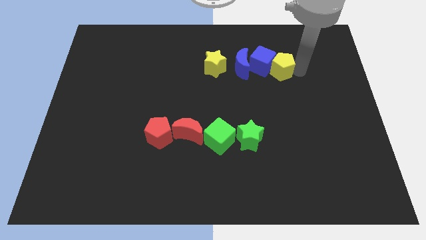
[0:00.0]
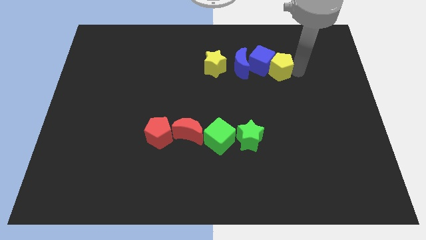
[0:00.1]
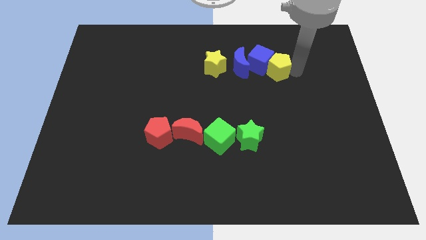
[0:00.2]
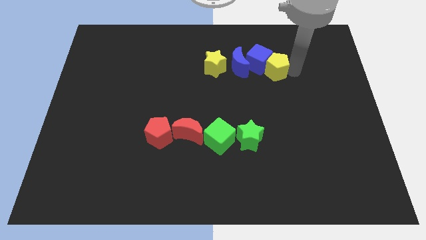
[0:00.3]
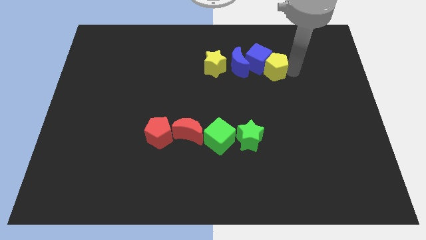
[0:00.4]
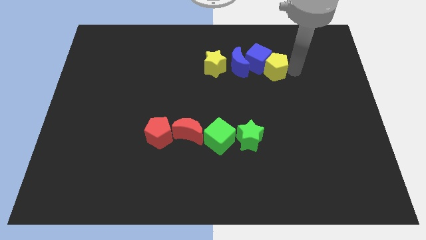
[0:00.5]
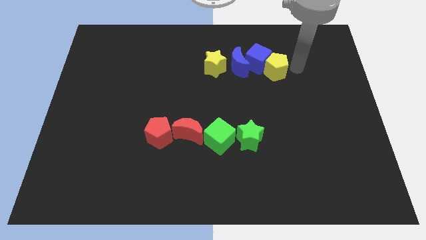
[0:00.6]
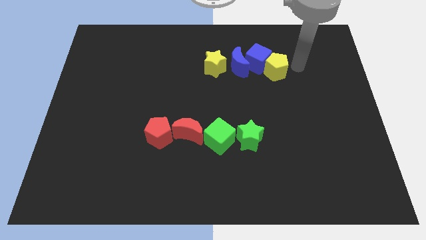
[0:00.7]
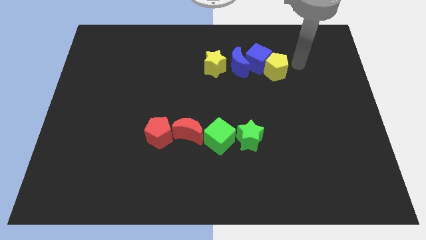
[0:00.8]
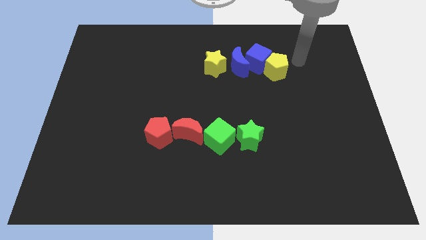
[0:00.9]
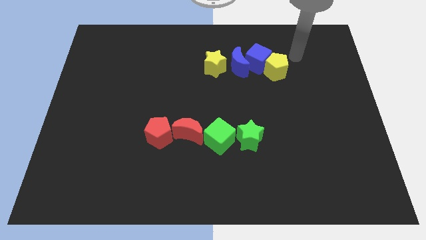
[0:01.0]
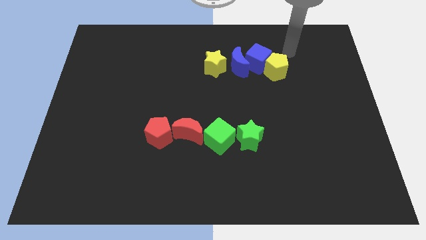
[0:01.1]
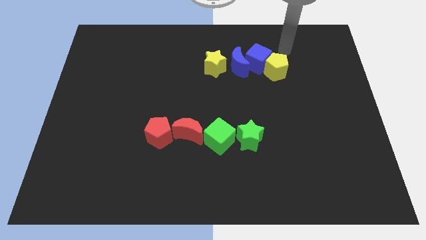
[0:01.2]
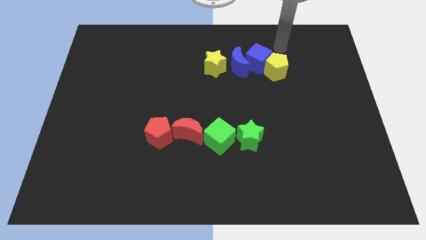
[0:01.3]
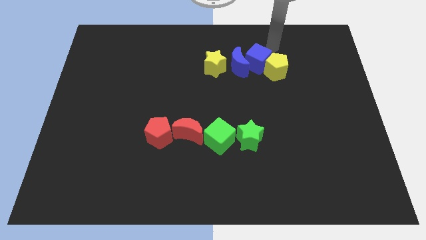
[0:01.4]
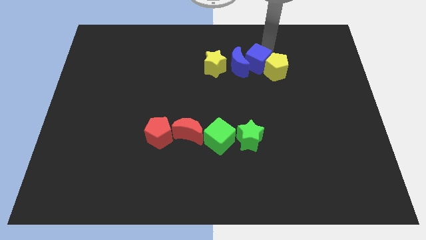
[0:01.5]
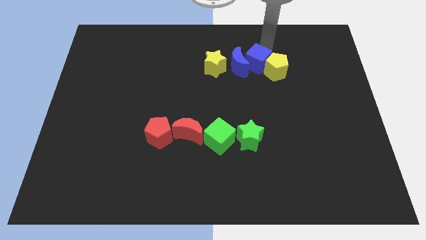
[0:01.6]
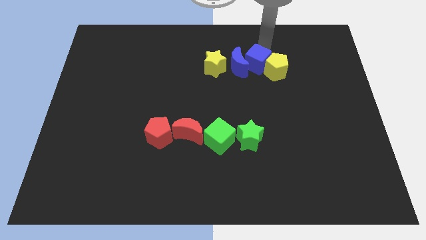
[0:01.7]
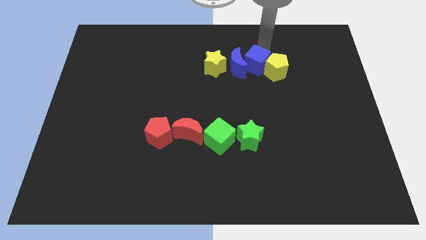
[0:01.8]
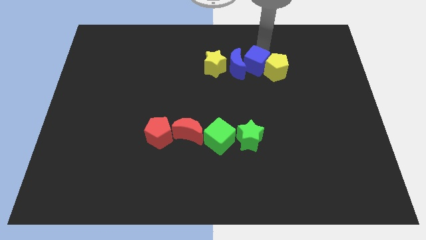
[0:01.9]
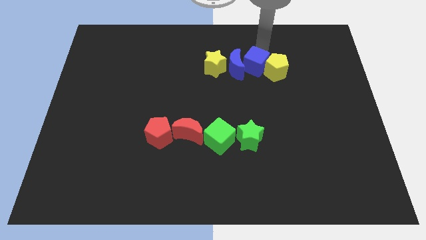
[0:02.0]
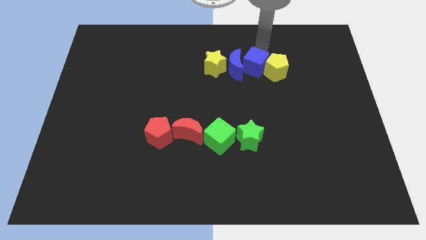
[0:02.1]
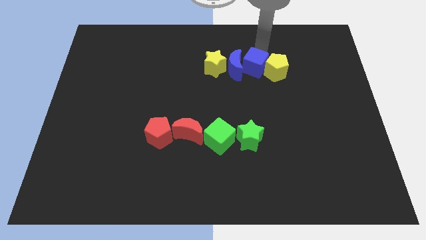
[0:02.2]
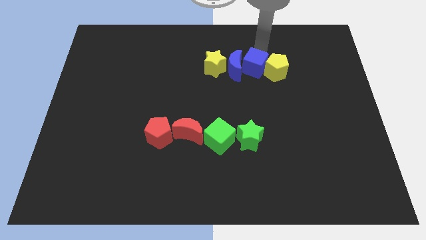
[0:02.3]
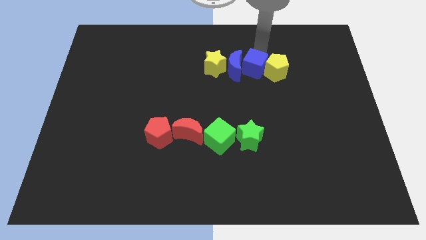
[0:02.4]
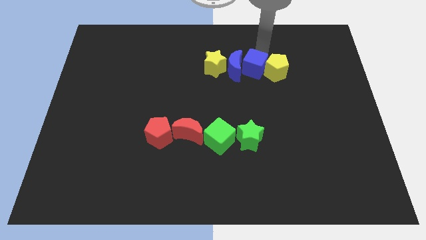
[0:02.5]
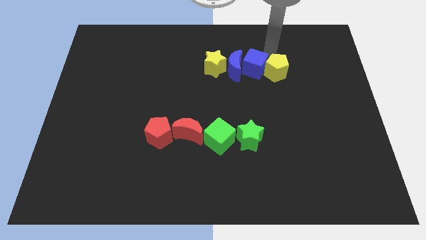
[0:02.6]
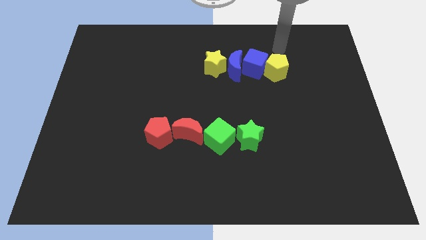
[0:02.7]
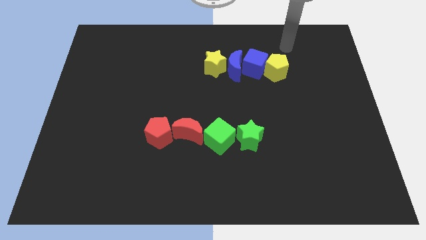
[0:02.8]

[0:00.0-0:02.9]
move the yellow pentagon into the blue cube

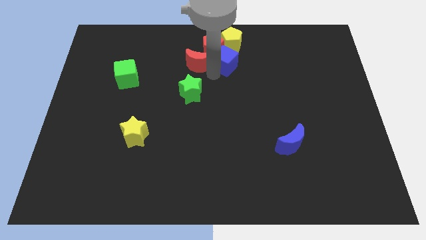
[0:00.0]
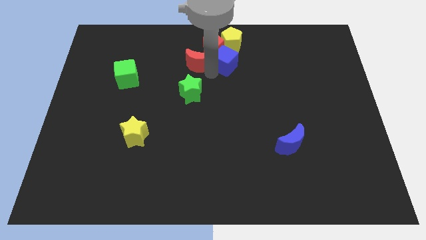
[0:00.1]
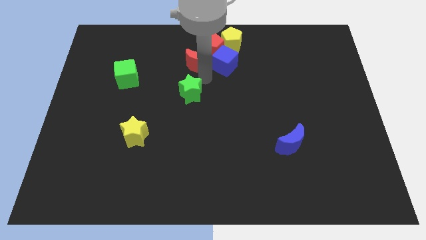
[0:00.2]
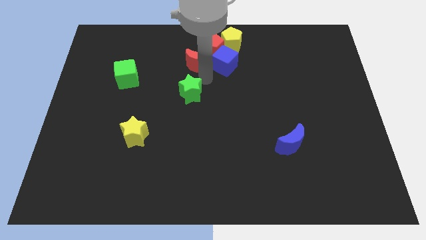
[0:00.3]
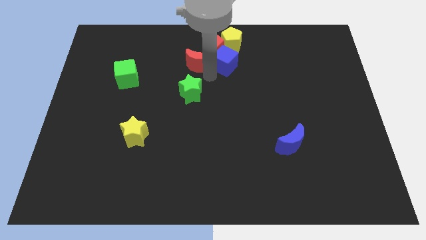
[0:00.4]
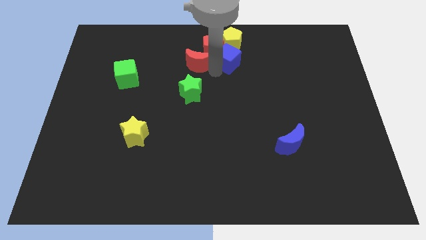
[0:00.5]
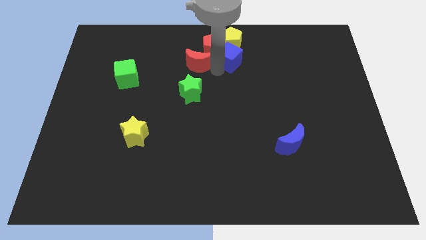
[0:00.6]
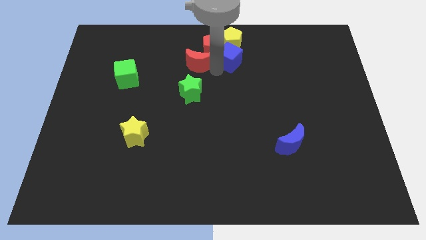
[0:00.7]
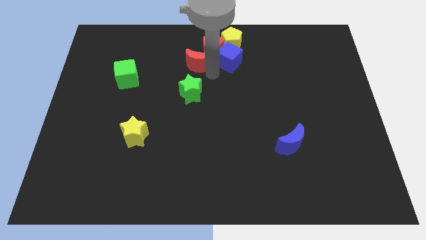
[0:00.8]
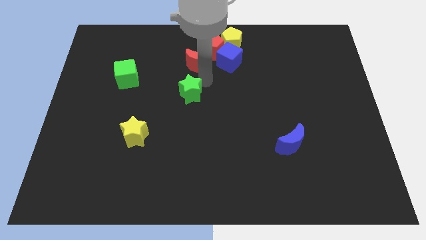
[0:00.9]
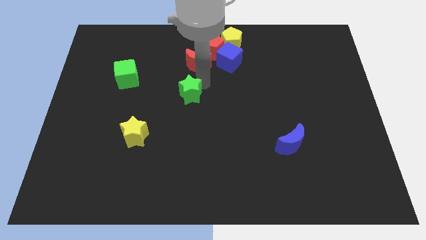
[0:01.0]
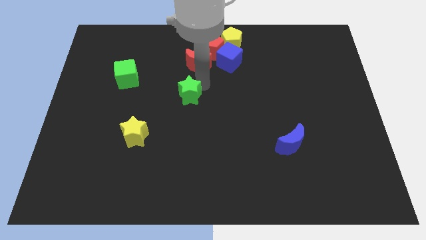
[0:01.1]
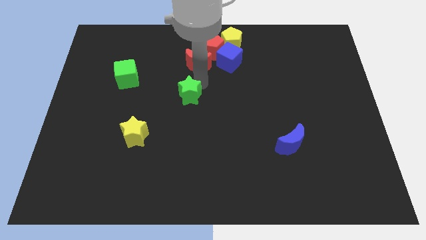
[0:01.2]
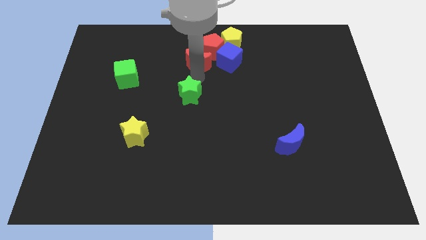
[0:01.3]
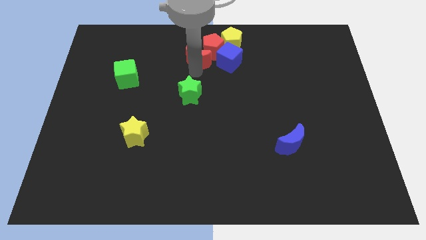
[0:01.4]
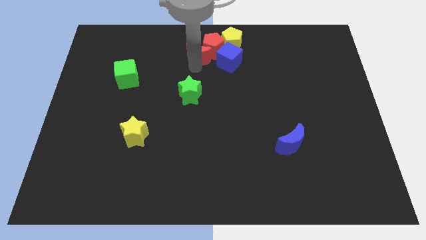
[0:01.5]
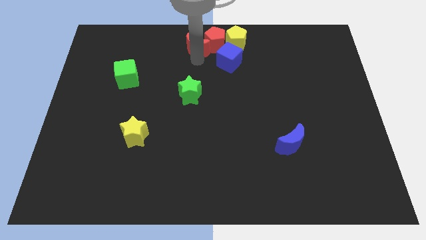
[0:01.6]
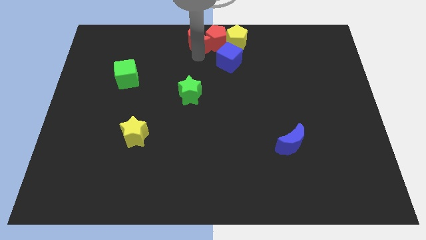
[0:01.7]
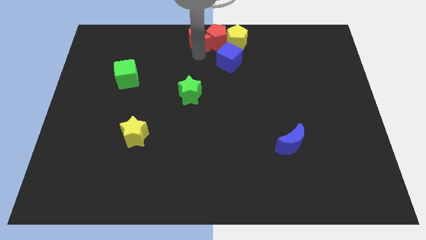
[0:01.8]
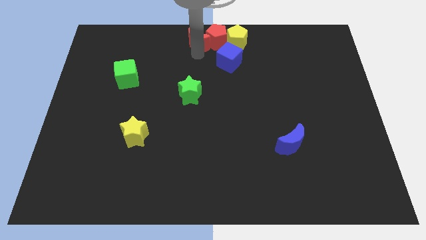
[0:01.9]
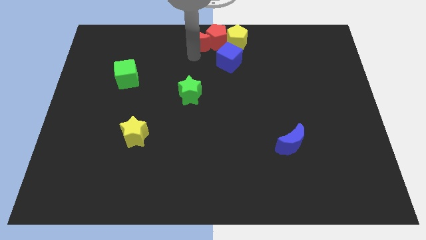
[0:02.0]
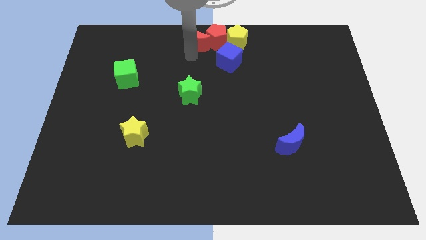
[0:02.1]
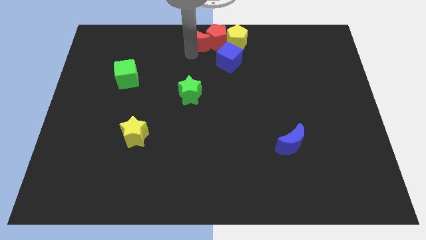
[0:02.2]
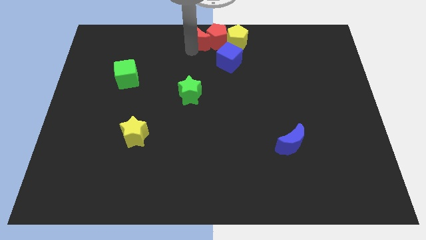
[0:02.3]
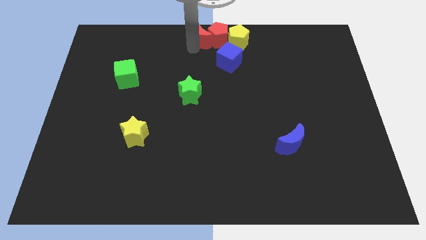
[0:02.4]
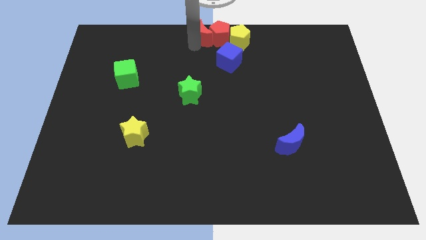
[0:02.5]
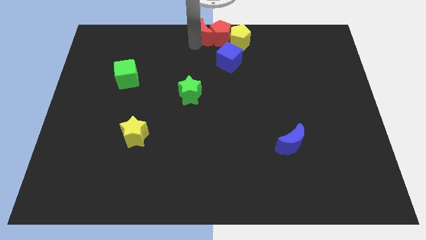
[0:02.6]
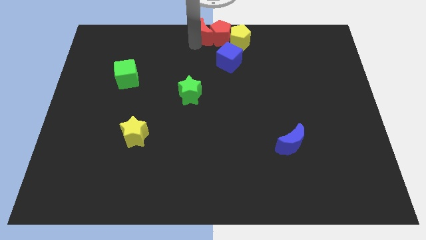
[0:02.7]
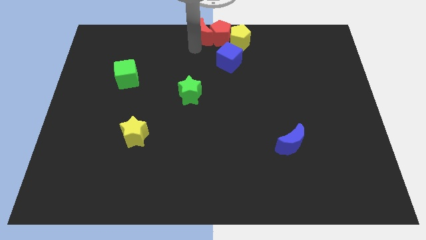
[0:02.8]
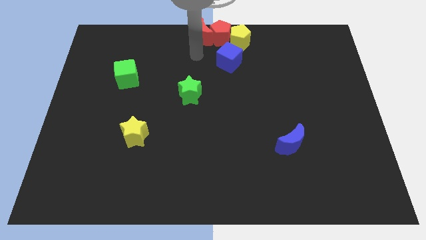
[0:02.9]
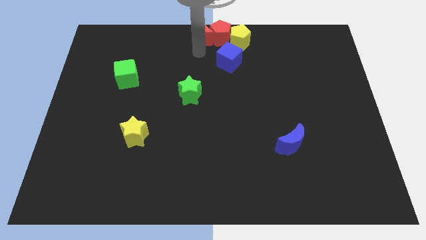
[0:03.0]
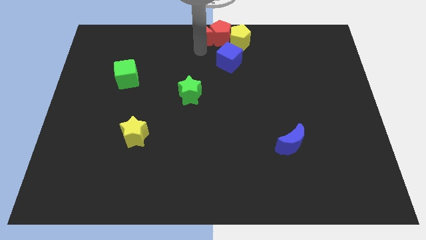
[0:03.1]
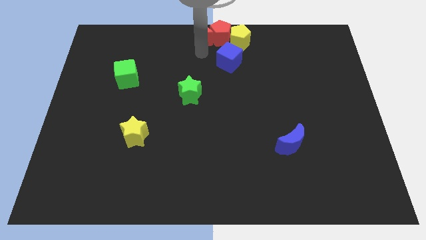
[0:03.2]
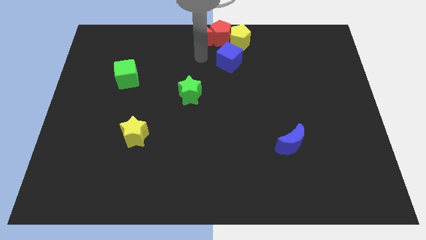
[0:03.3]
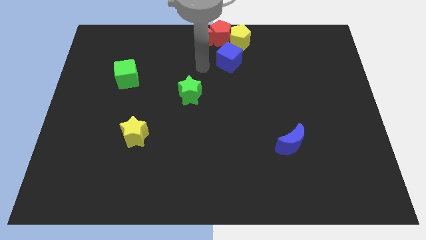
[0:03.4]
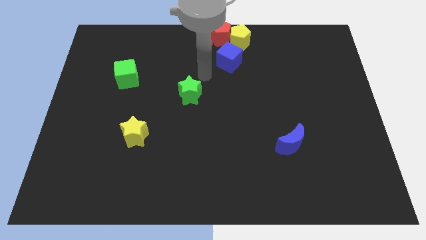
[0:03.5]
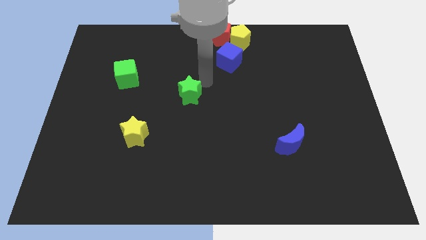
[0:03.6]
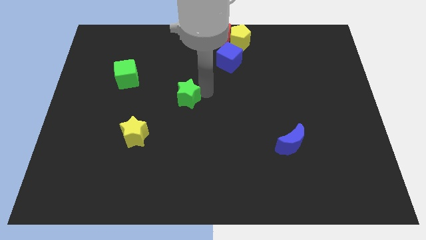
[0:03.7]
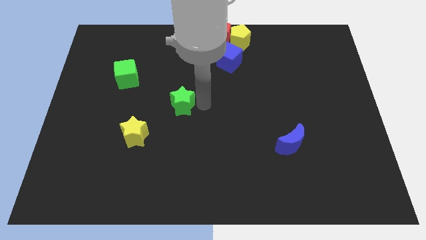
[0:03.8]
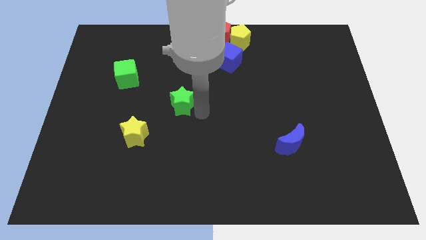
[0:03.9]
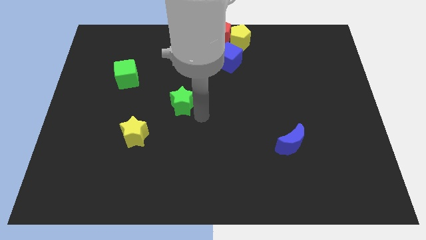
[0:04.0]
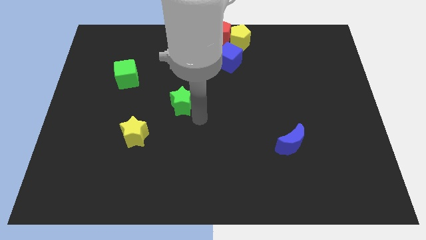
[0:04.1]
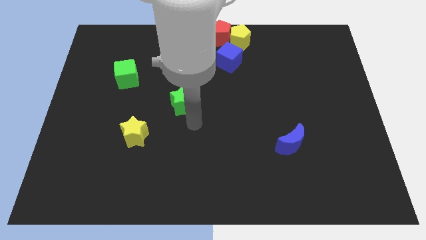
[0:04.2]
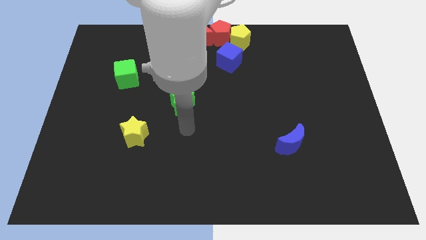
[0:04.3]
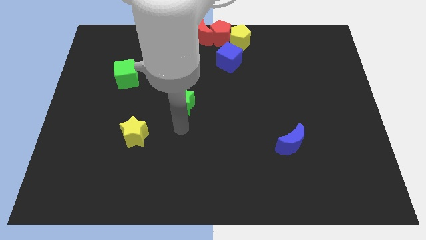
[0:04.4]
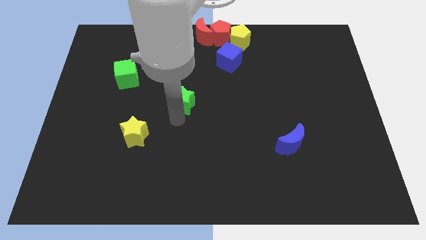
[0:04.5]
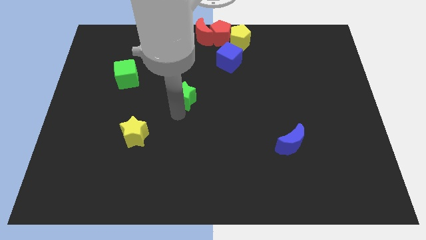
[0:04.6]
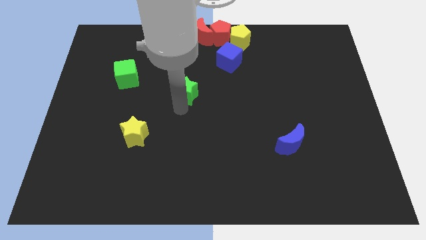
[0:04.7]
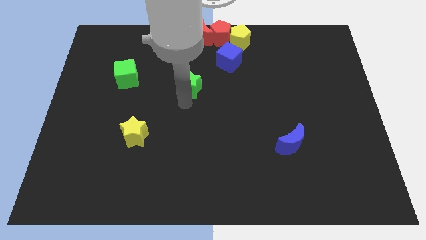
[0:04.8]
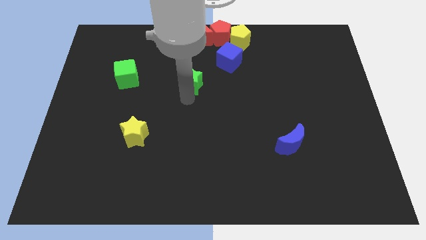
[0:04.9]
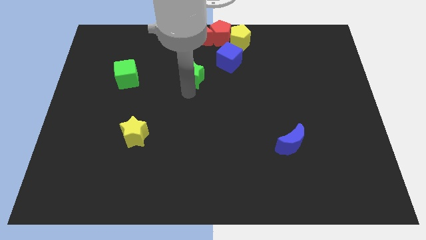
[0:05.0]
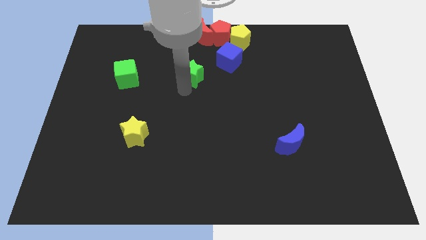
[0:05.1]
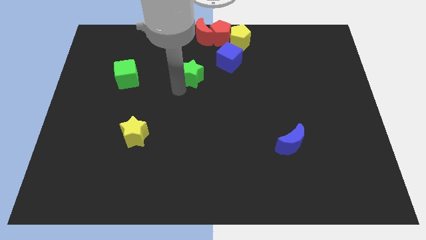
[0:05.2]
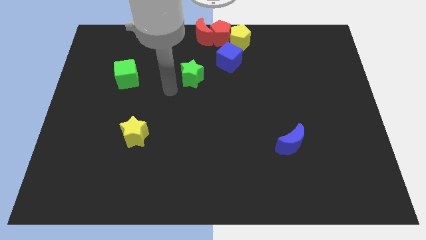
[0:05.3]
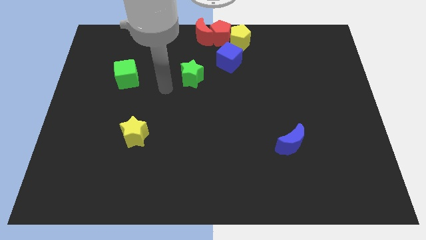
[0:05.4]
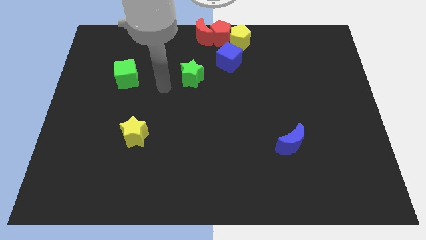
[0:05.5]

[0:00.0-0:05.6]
slide the red moon and red pentagon into the top center

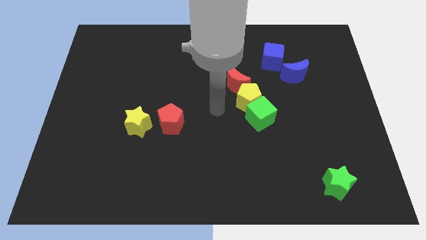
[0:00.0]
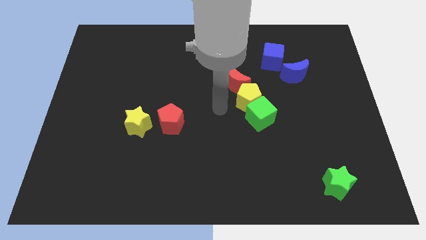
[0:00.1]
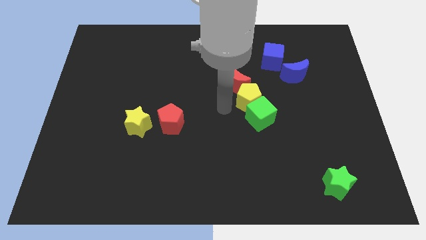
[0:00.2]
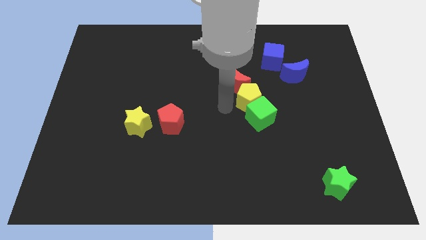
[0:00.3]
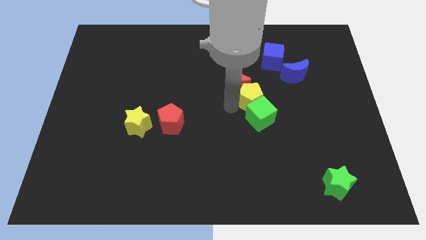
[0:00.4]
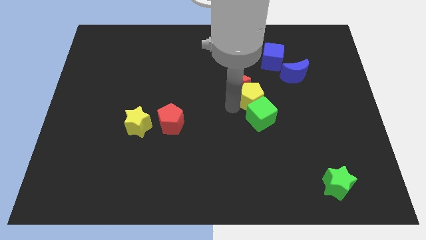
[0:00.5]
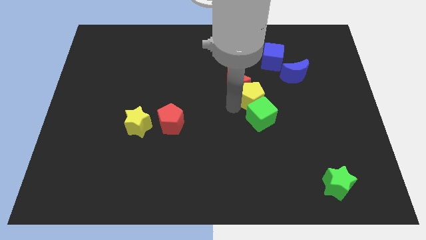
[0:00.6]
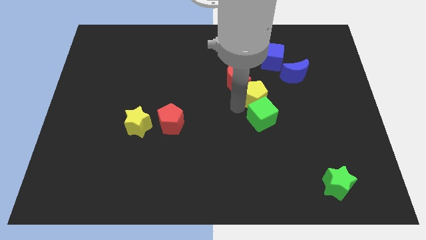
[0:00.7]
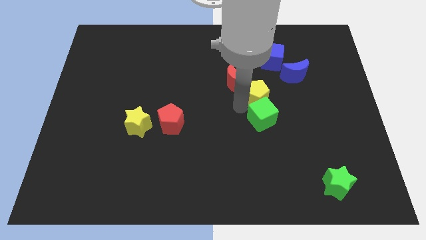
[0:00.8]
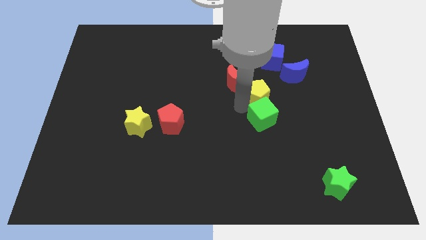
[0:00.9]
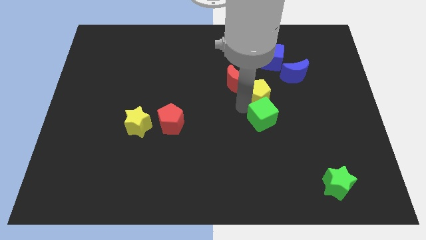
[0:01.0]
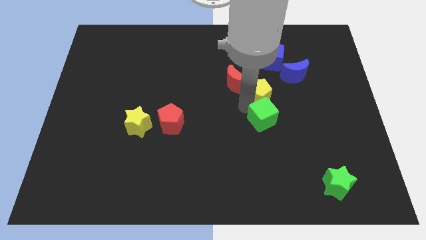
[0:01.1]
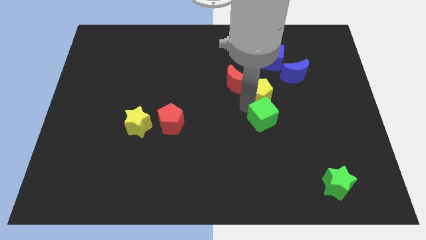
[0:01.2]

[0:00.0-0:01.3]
push the yellow pentagon slightly to the right
